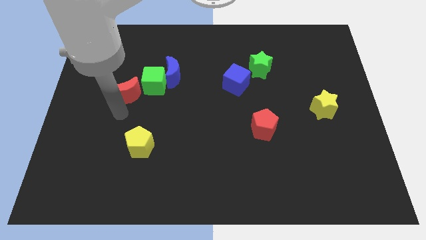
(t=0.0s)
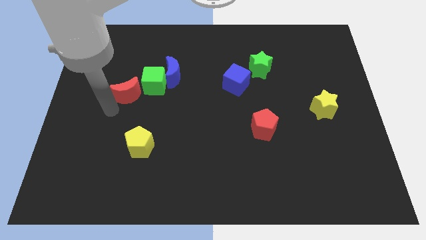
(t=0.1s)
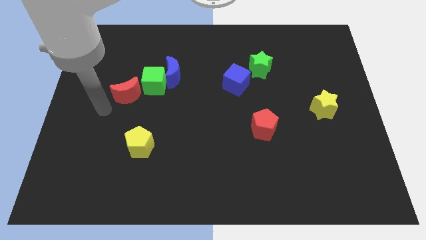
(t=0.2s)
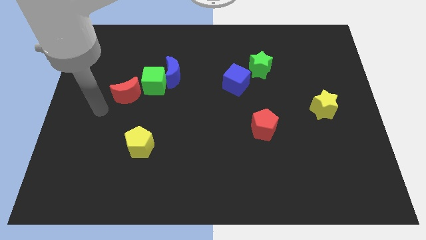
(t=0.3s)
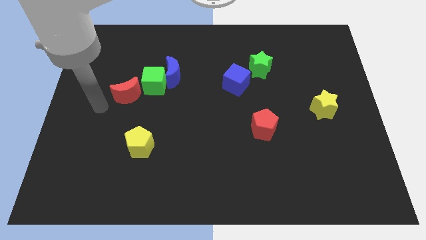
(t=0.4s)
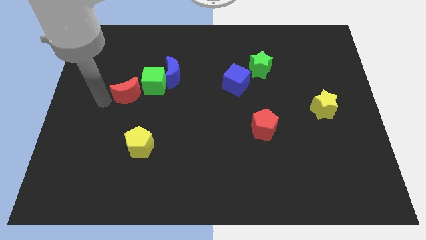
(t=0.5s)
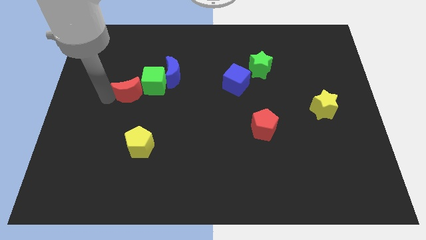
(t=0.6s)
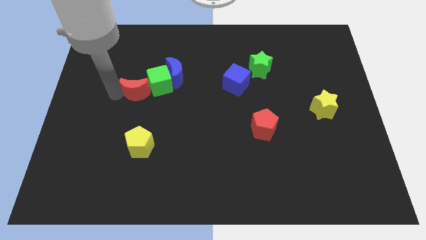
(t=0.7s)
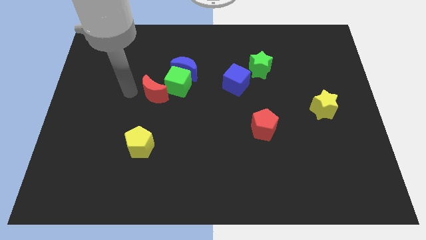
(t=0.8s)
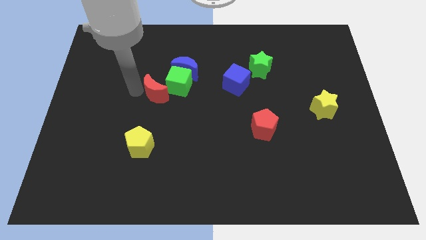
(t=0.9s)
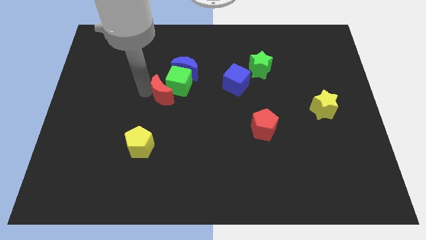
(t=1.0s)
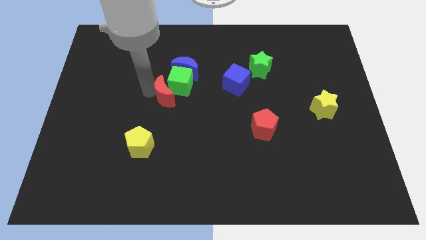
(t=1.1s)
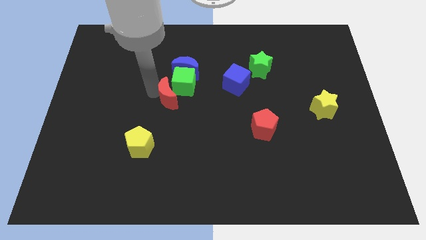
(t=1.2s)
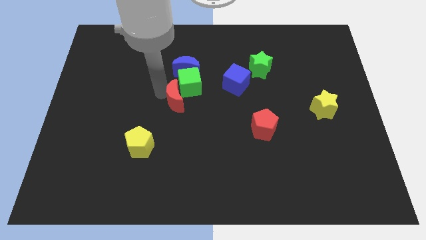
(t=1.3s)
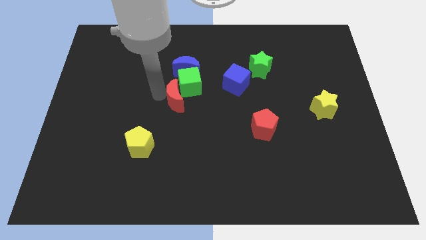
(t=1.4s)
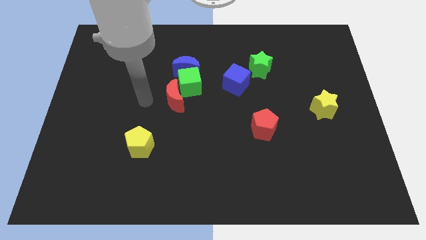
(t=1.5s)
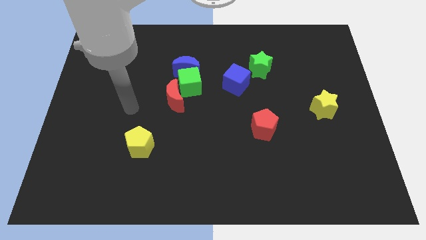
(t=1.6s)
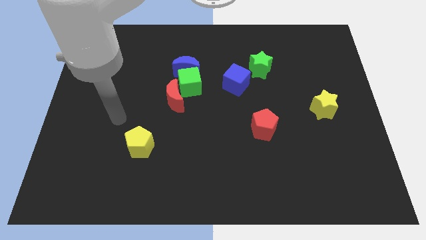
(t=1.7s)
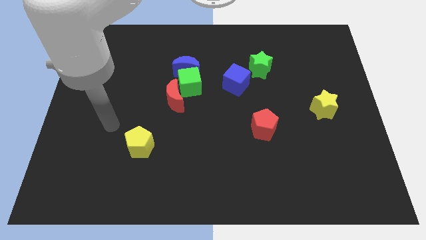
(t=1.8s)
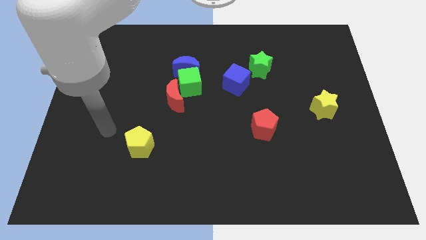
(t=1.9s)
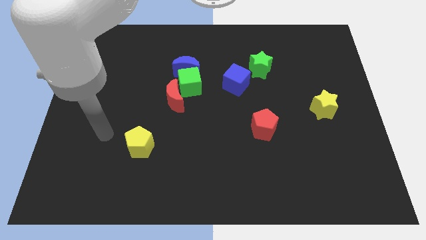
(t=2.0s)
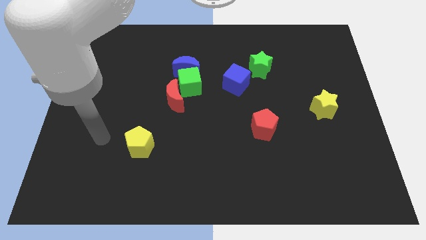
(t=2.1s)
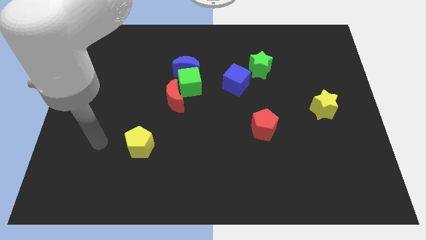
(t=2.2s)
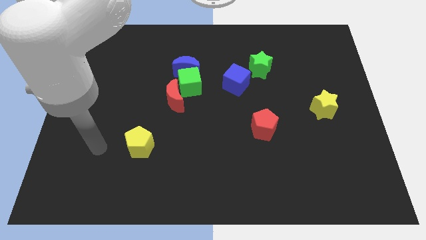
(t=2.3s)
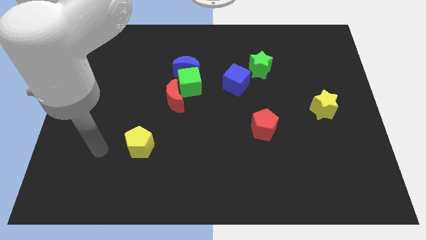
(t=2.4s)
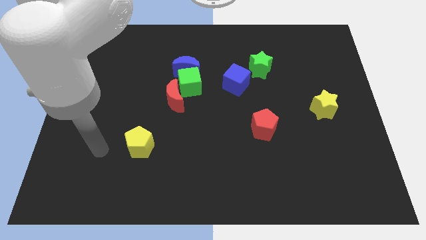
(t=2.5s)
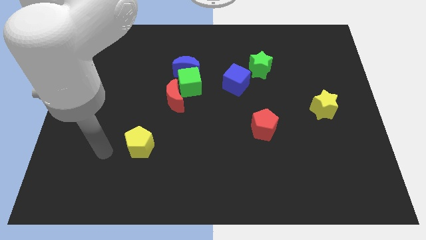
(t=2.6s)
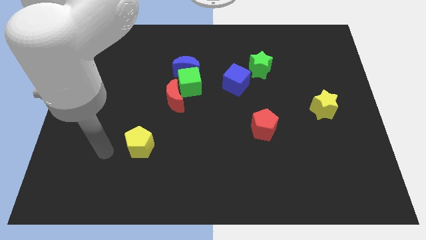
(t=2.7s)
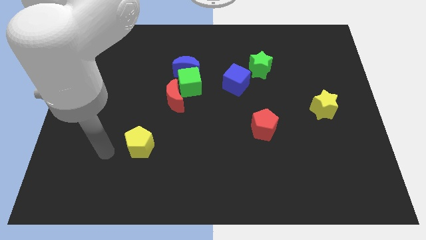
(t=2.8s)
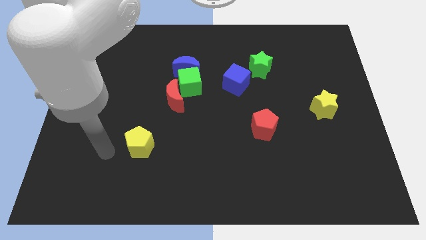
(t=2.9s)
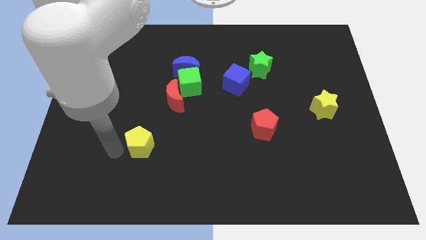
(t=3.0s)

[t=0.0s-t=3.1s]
slide the red moon into the green cube

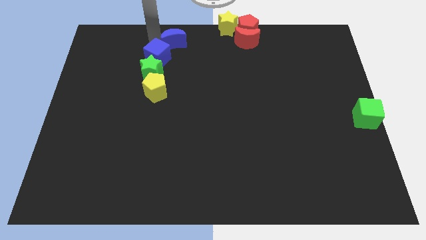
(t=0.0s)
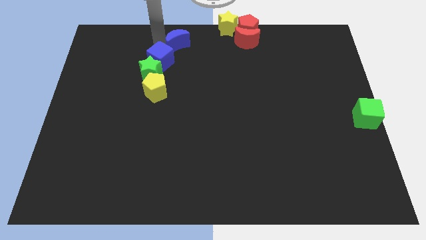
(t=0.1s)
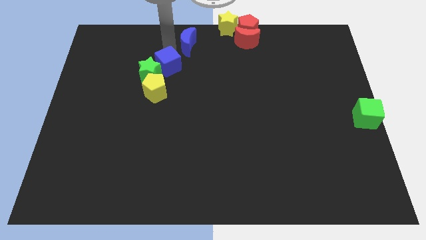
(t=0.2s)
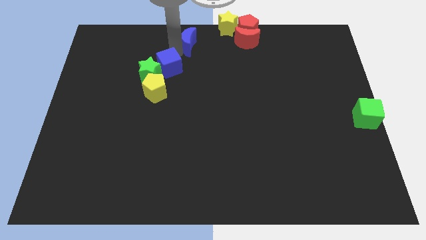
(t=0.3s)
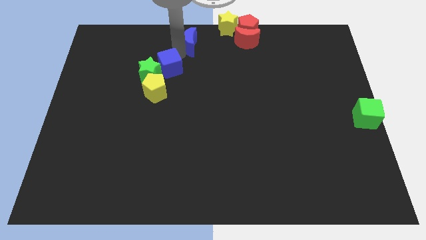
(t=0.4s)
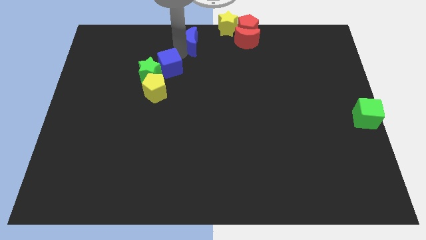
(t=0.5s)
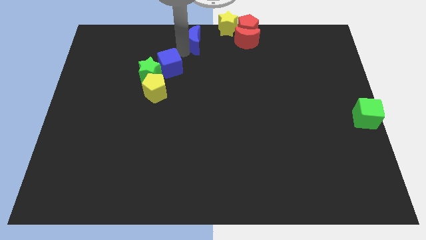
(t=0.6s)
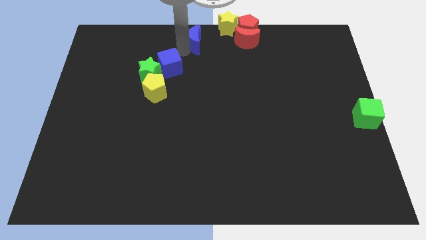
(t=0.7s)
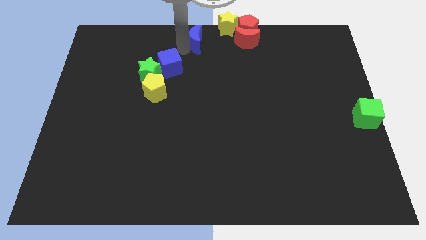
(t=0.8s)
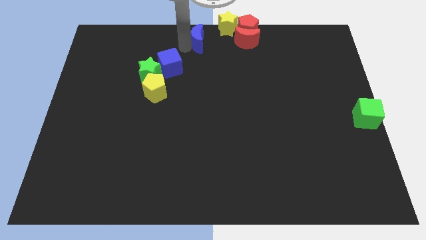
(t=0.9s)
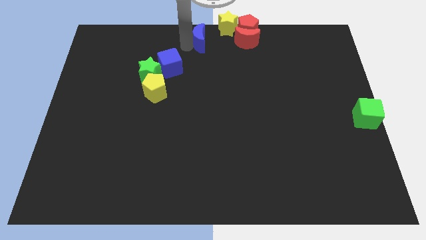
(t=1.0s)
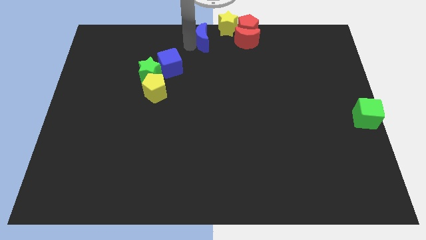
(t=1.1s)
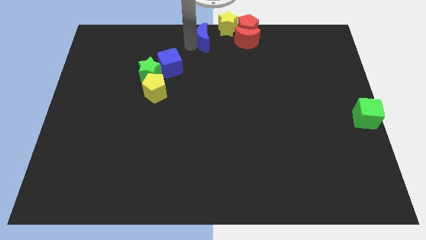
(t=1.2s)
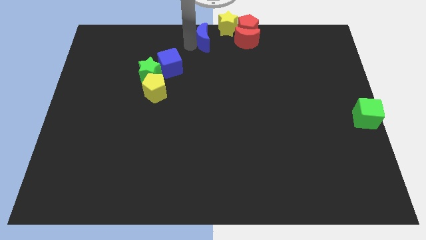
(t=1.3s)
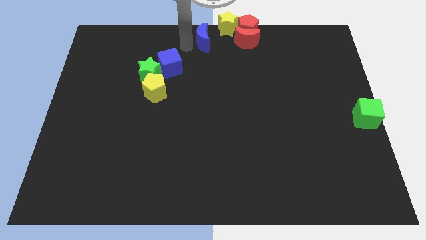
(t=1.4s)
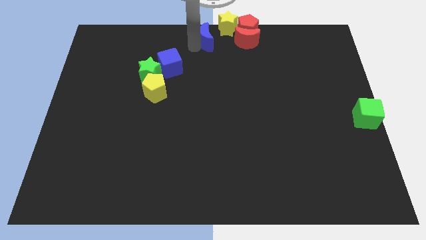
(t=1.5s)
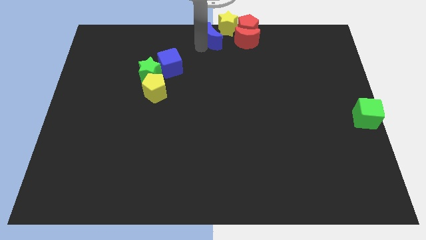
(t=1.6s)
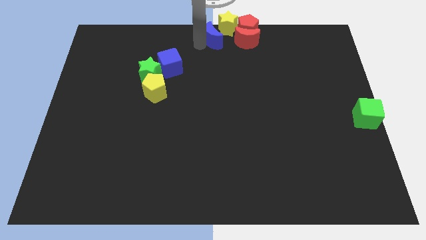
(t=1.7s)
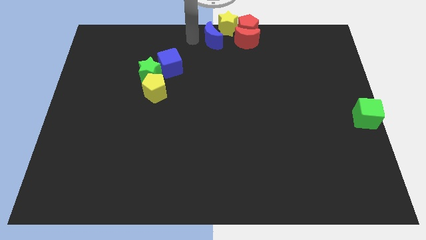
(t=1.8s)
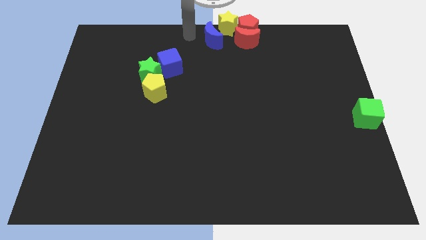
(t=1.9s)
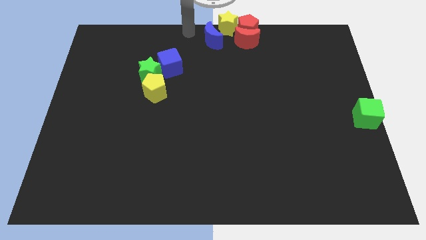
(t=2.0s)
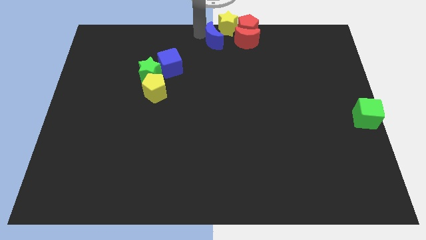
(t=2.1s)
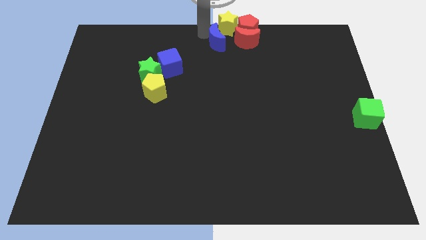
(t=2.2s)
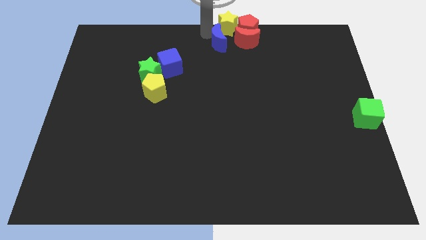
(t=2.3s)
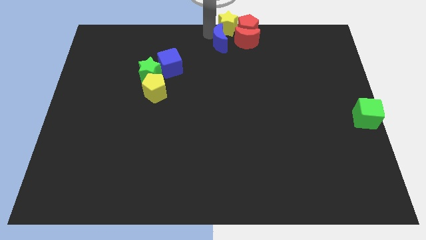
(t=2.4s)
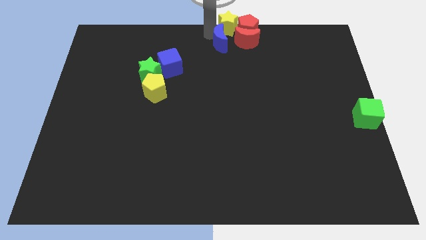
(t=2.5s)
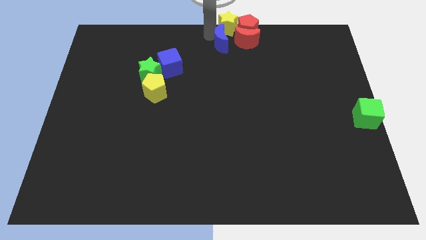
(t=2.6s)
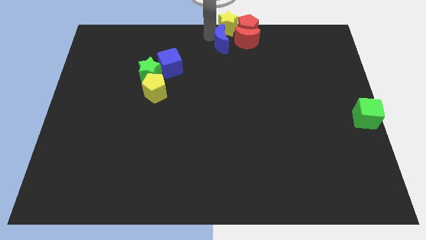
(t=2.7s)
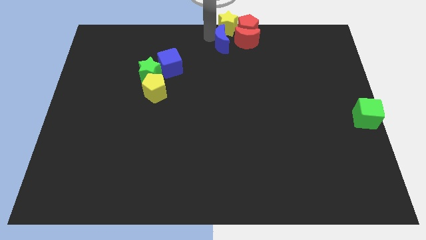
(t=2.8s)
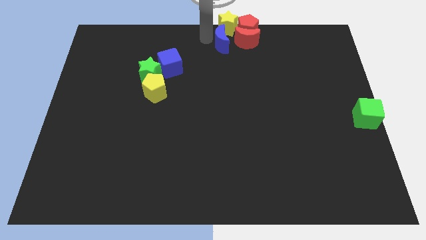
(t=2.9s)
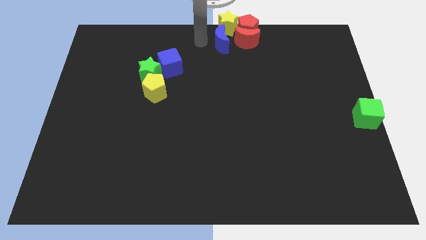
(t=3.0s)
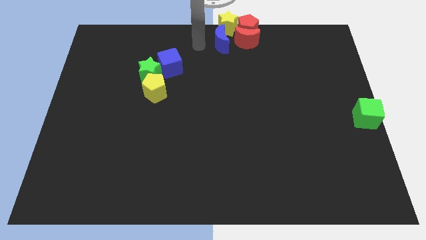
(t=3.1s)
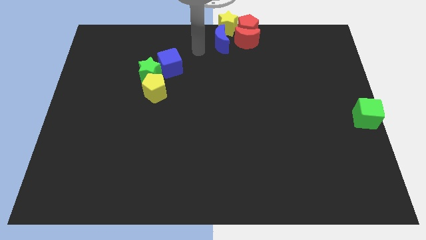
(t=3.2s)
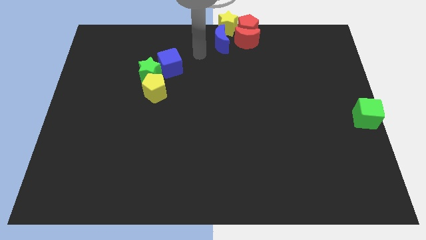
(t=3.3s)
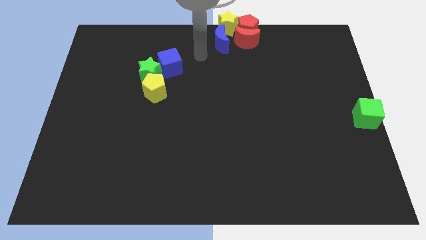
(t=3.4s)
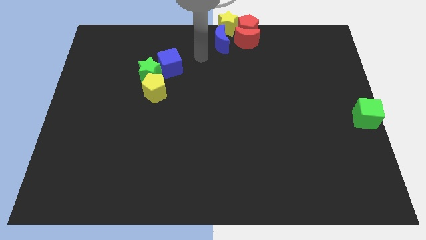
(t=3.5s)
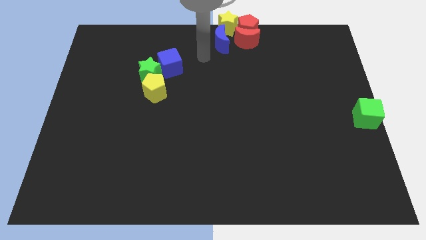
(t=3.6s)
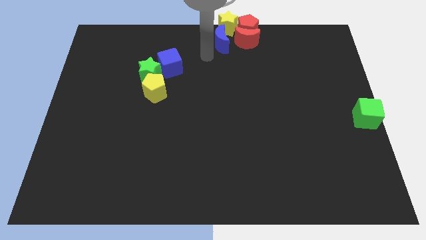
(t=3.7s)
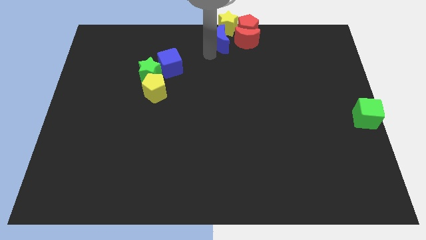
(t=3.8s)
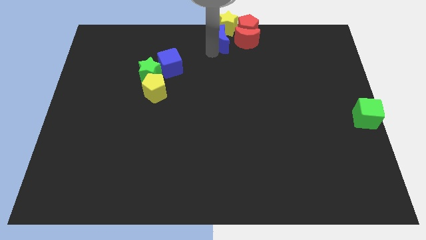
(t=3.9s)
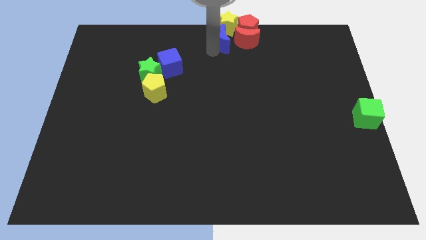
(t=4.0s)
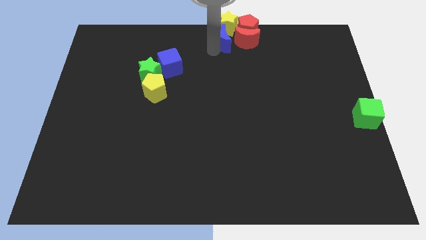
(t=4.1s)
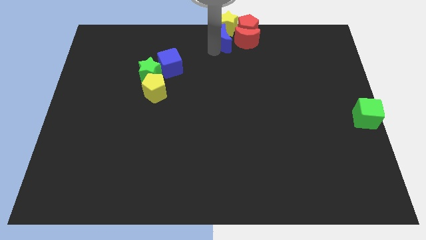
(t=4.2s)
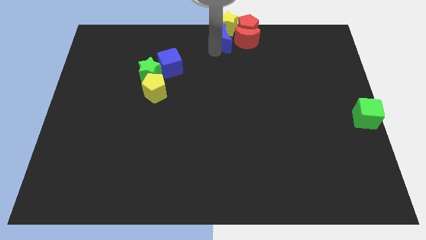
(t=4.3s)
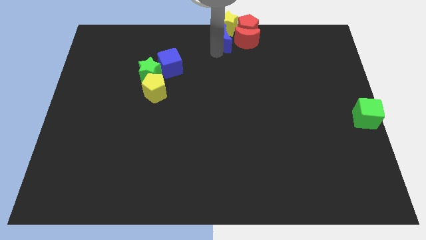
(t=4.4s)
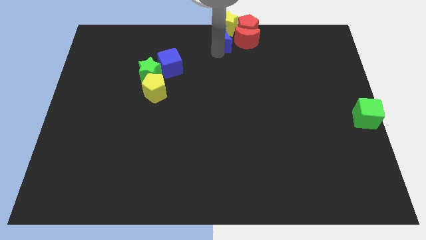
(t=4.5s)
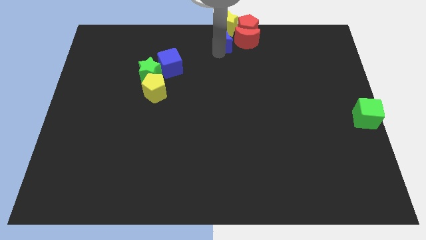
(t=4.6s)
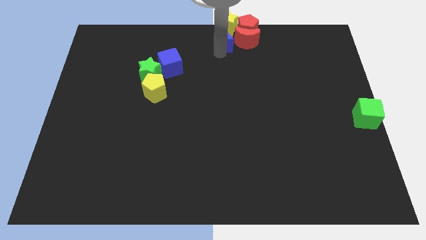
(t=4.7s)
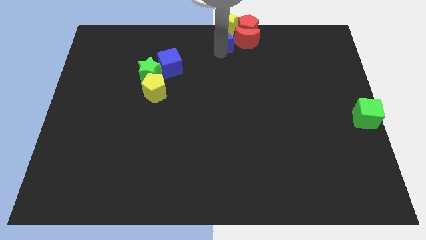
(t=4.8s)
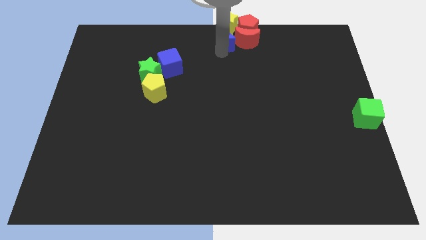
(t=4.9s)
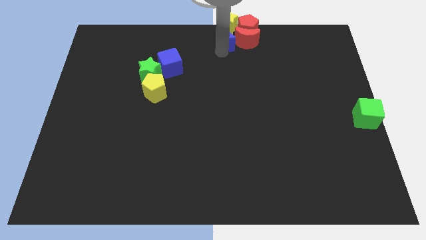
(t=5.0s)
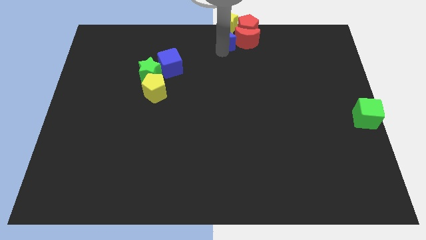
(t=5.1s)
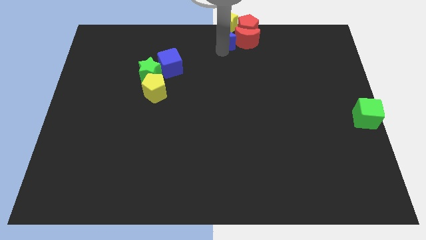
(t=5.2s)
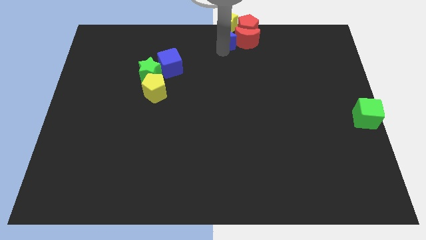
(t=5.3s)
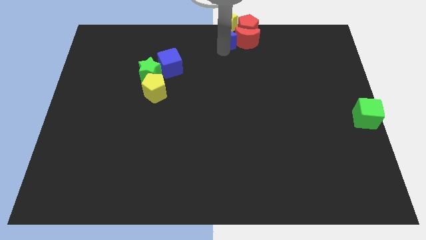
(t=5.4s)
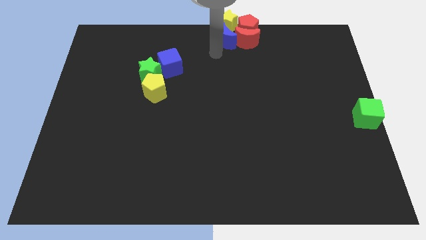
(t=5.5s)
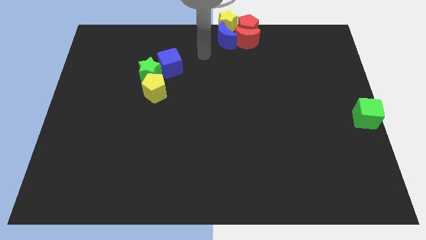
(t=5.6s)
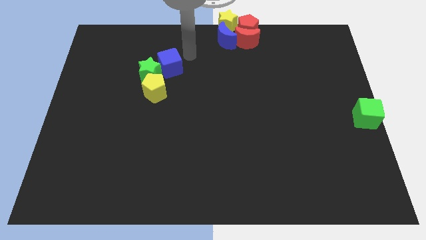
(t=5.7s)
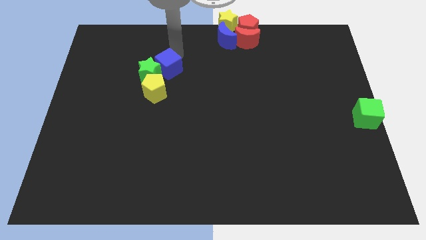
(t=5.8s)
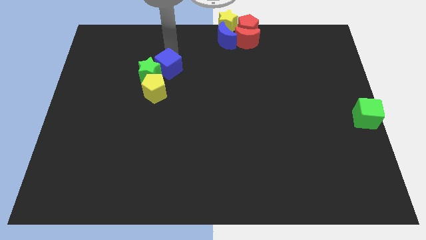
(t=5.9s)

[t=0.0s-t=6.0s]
move the blue crescent into the yellow star
